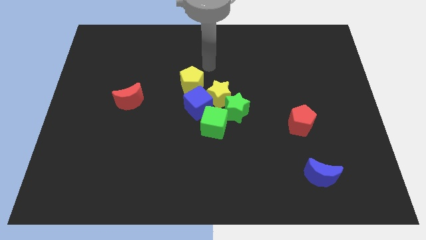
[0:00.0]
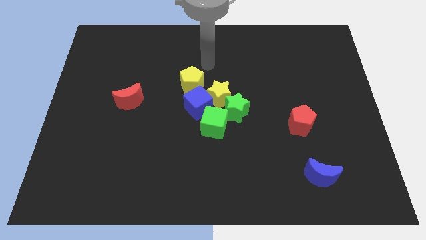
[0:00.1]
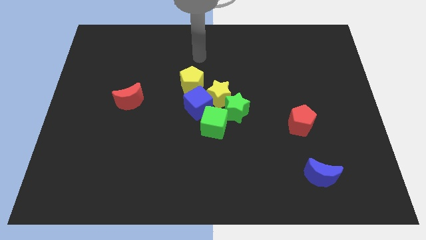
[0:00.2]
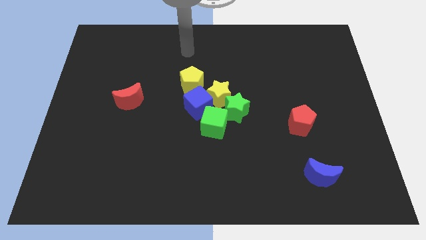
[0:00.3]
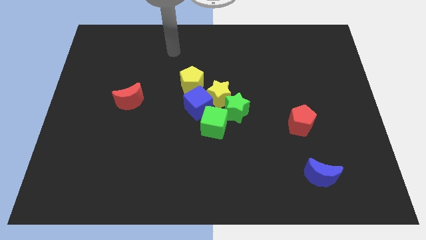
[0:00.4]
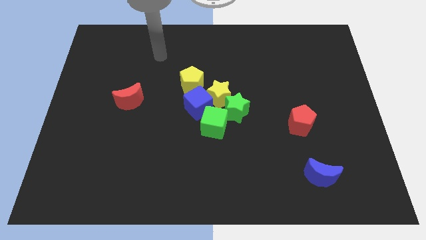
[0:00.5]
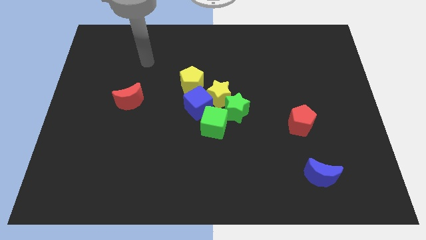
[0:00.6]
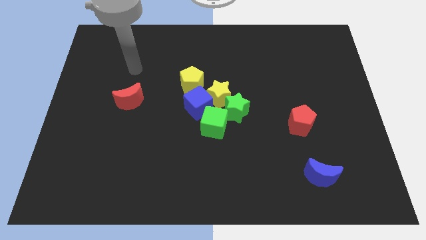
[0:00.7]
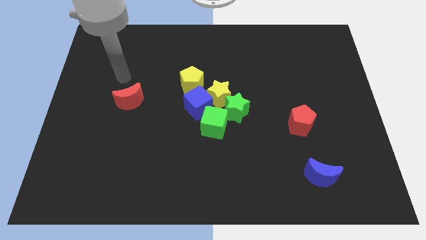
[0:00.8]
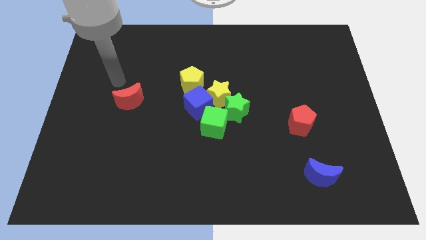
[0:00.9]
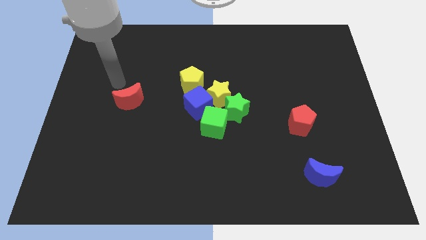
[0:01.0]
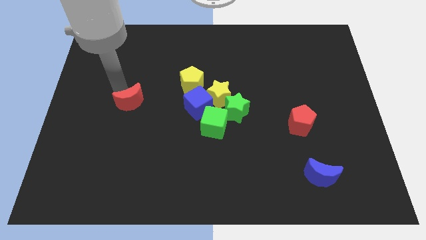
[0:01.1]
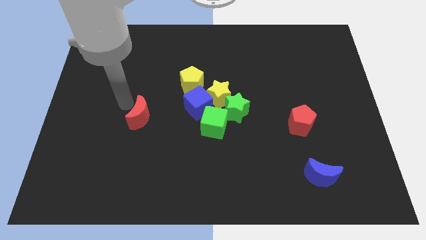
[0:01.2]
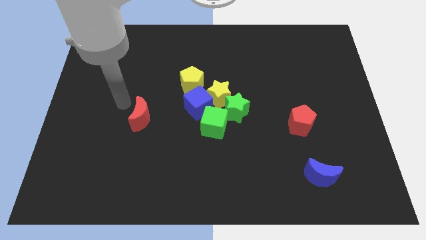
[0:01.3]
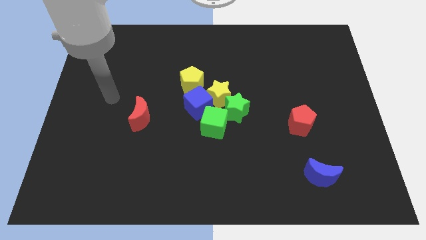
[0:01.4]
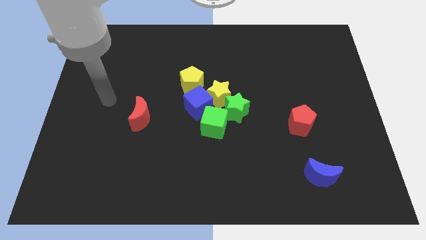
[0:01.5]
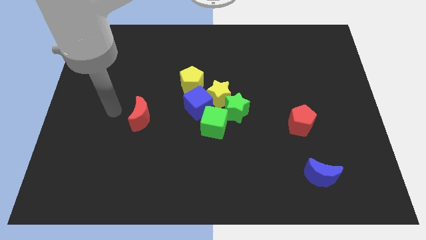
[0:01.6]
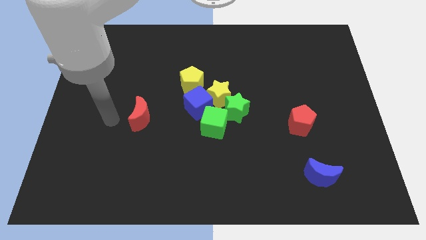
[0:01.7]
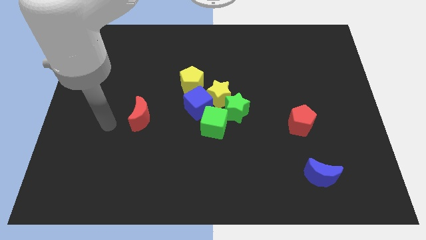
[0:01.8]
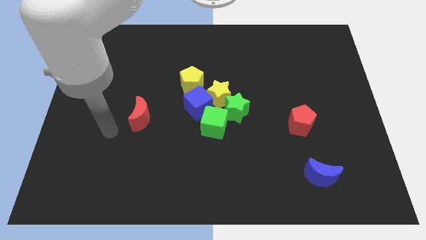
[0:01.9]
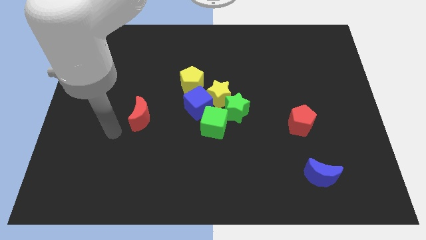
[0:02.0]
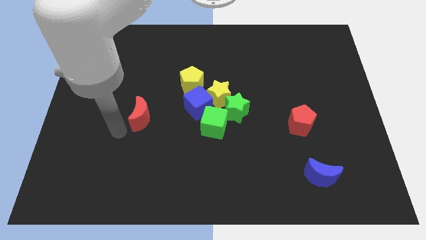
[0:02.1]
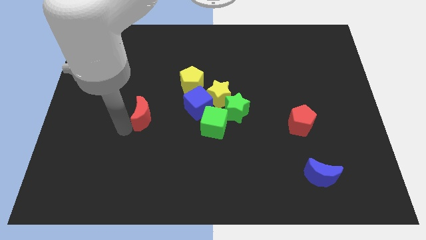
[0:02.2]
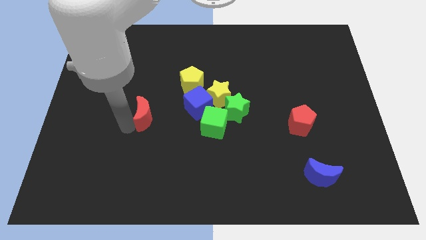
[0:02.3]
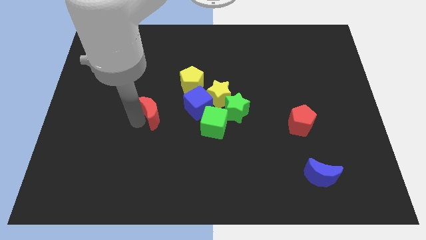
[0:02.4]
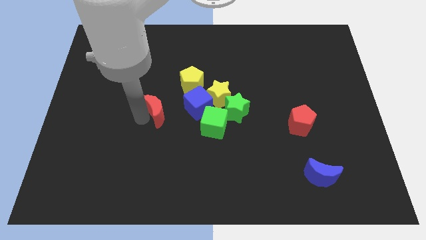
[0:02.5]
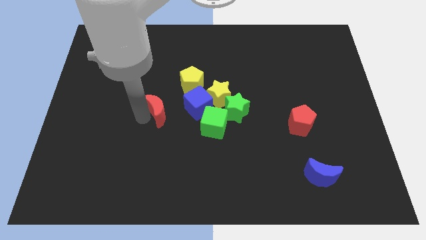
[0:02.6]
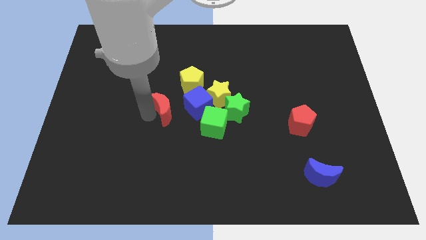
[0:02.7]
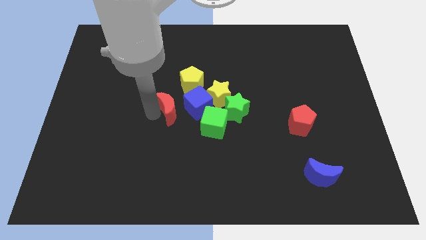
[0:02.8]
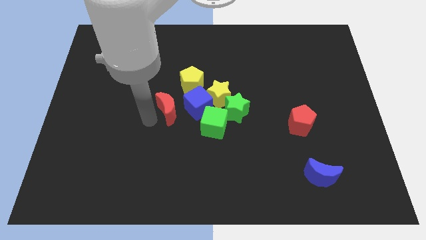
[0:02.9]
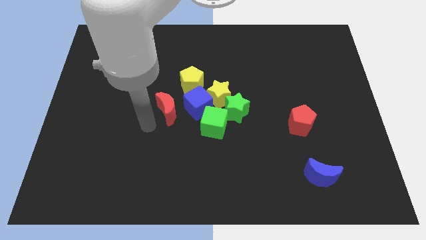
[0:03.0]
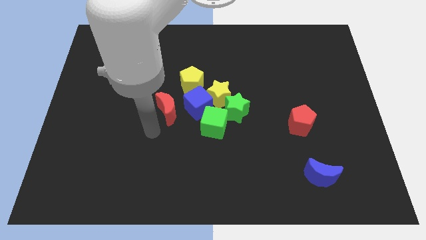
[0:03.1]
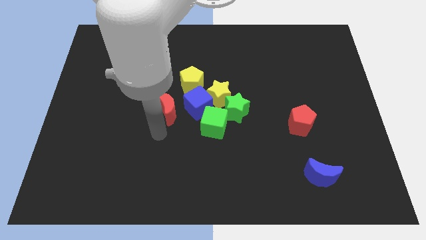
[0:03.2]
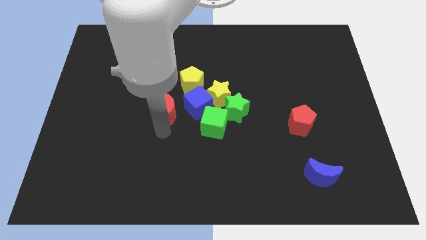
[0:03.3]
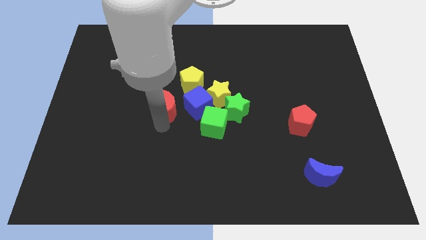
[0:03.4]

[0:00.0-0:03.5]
push the red crescent to the left of the blue cube

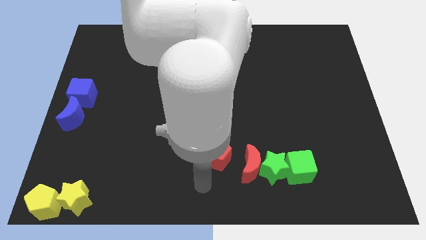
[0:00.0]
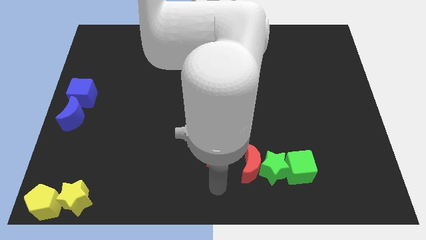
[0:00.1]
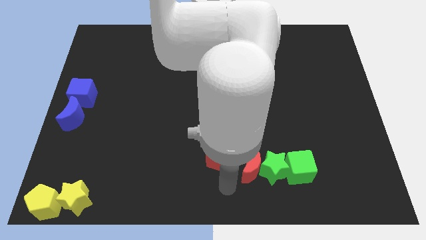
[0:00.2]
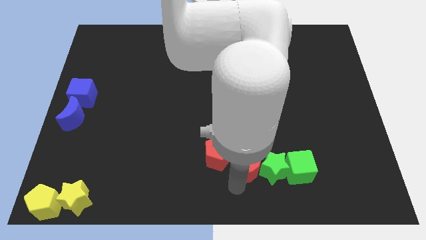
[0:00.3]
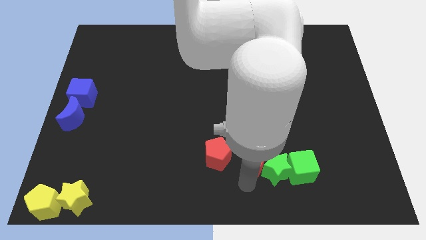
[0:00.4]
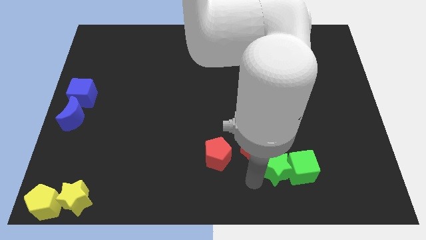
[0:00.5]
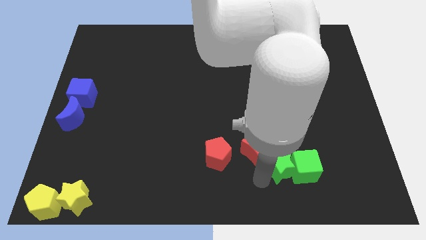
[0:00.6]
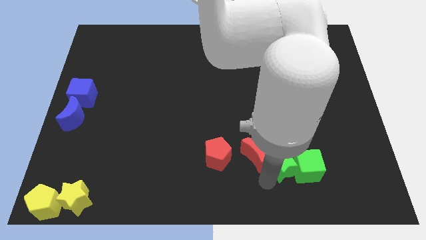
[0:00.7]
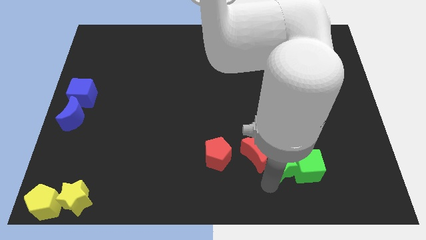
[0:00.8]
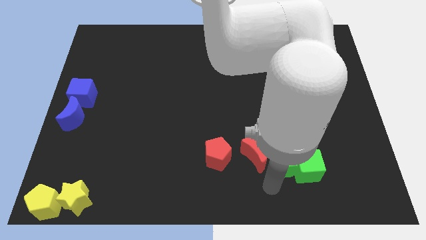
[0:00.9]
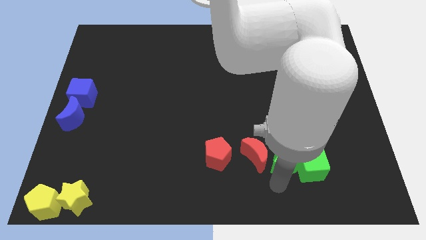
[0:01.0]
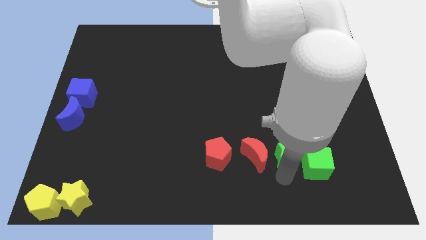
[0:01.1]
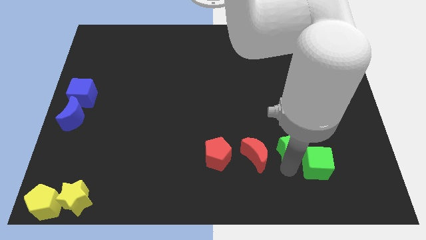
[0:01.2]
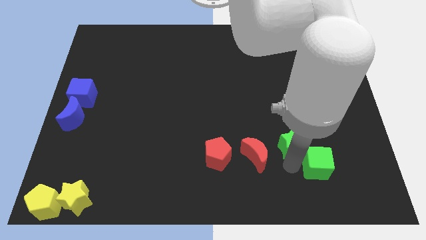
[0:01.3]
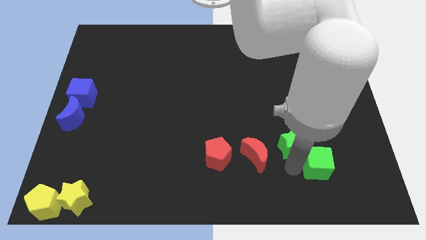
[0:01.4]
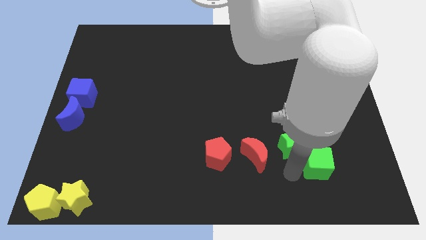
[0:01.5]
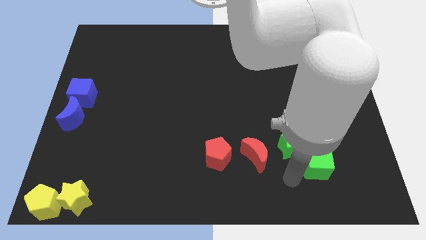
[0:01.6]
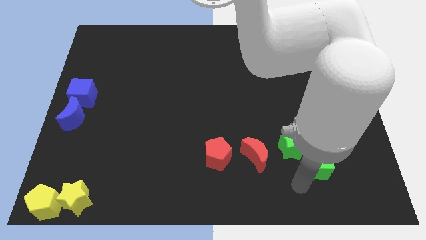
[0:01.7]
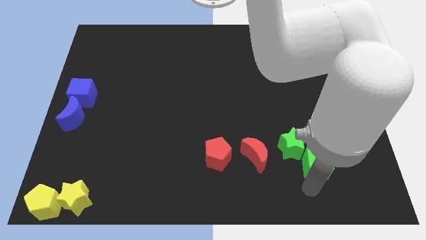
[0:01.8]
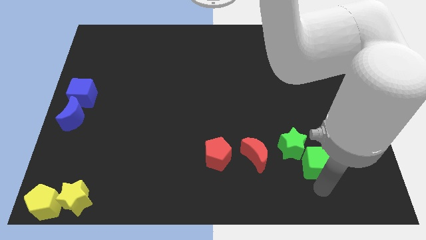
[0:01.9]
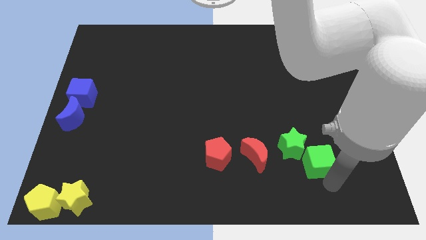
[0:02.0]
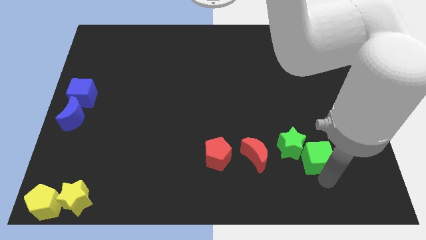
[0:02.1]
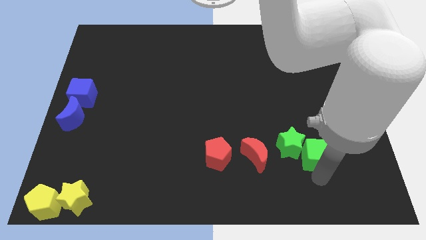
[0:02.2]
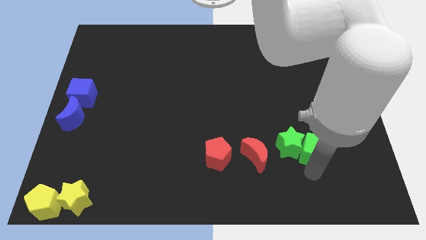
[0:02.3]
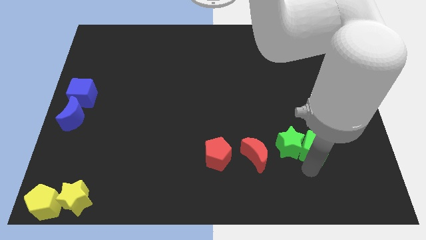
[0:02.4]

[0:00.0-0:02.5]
slightly push the green blocks upward

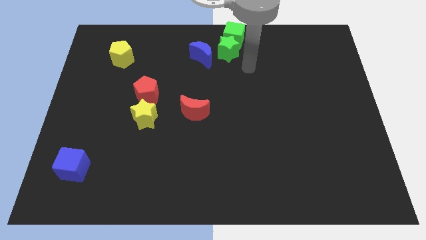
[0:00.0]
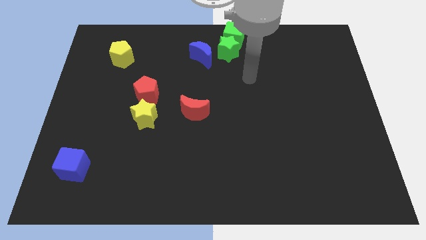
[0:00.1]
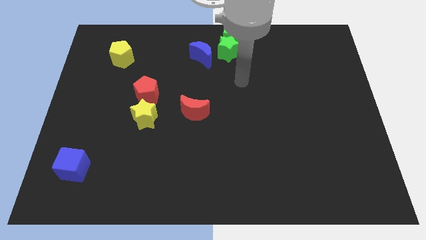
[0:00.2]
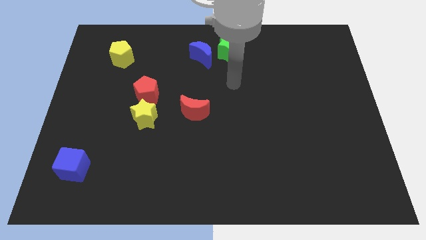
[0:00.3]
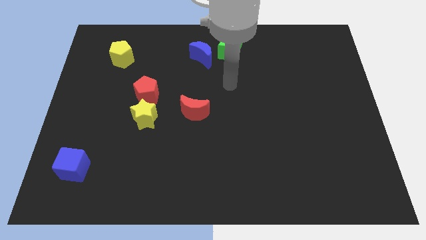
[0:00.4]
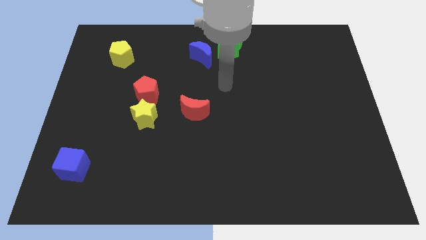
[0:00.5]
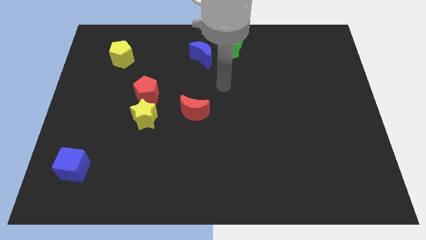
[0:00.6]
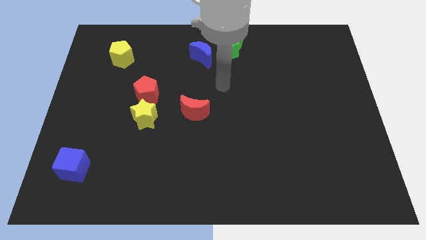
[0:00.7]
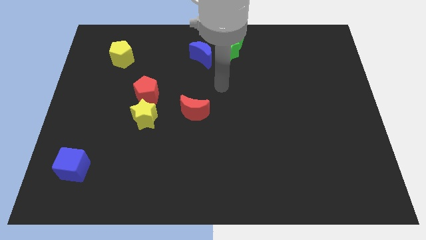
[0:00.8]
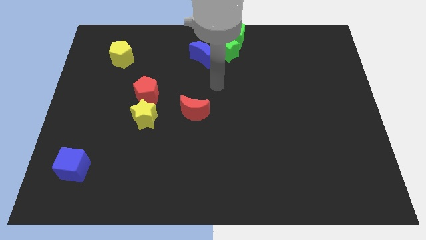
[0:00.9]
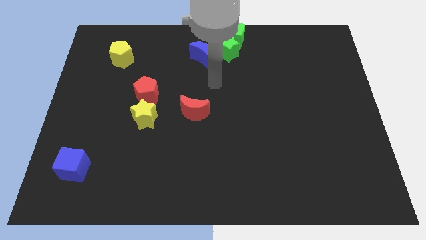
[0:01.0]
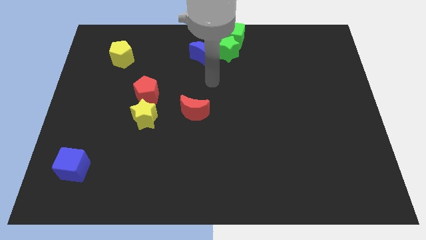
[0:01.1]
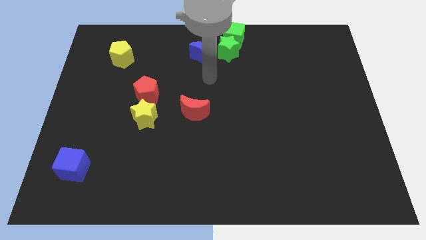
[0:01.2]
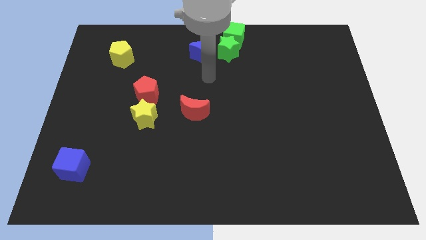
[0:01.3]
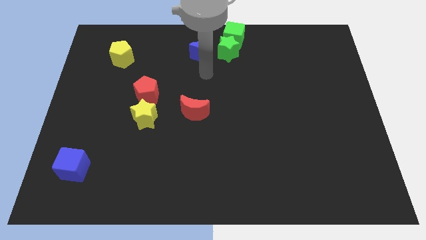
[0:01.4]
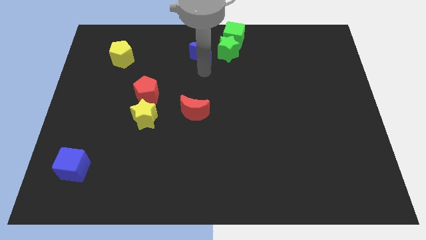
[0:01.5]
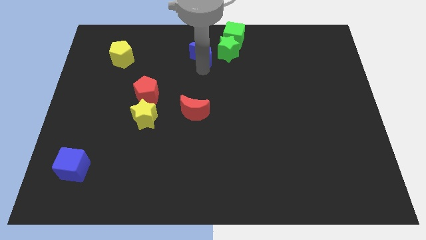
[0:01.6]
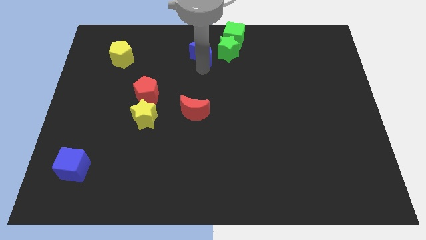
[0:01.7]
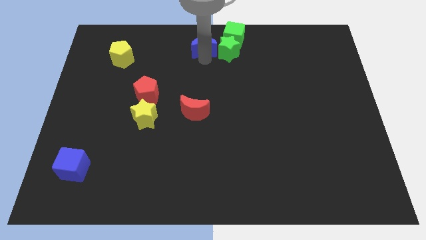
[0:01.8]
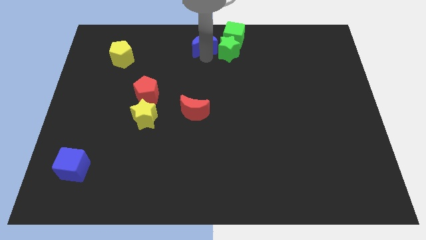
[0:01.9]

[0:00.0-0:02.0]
move the blue moon into the green star

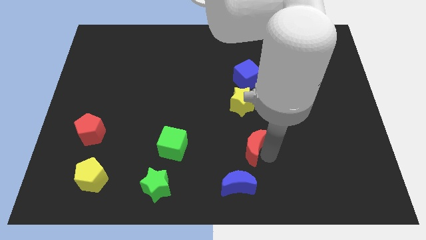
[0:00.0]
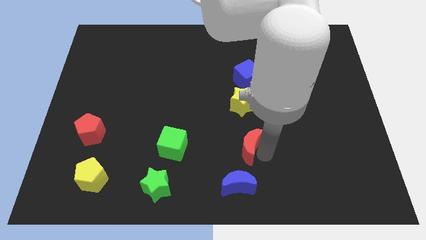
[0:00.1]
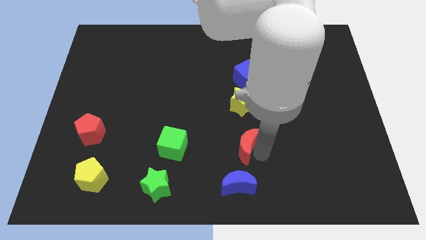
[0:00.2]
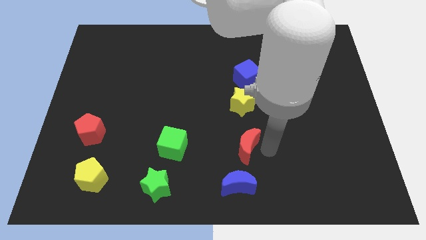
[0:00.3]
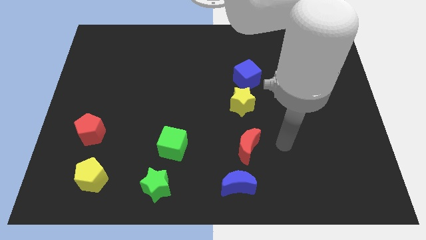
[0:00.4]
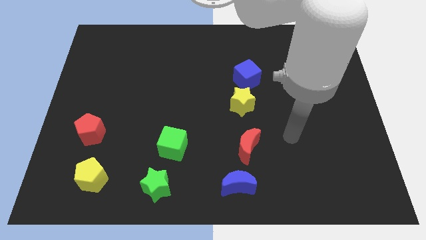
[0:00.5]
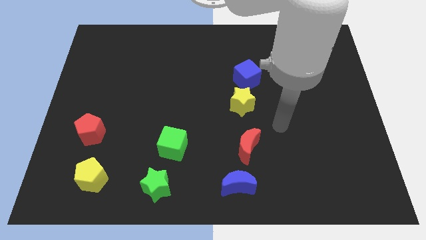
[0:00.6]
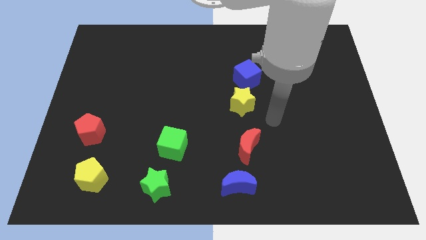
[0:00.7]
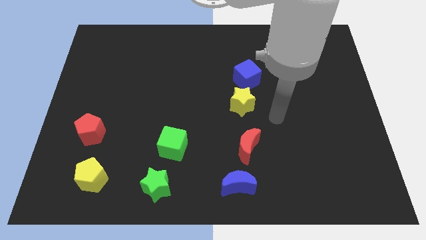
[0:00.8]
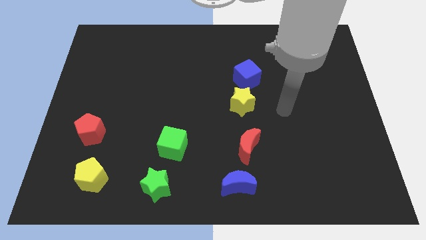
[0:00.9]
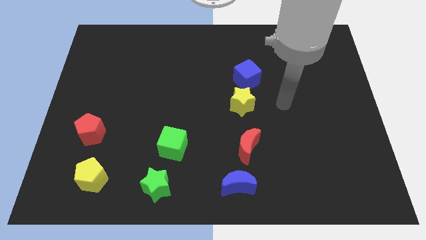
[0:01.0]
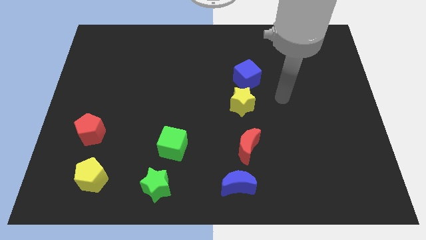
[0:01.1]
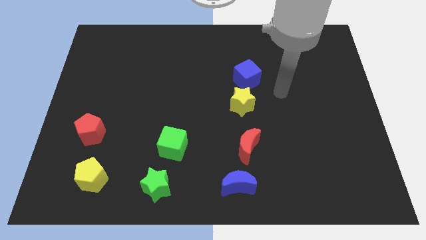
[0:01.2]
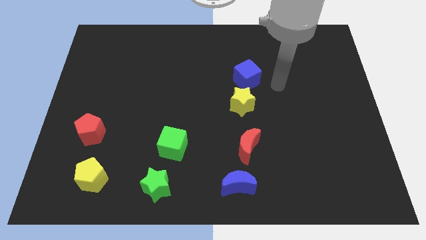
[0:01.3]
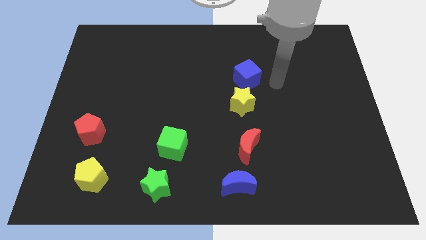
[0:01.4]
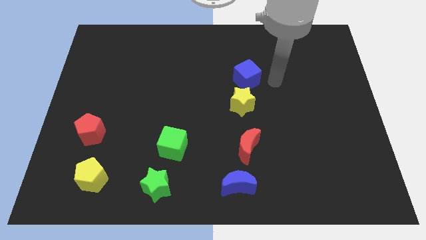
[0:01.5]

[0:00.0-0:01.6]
move the arm towards the blue cube
